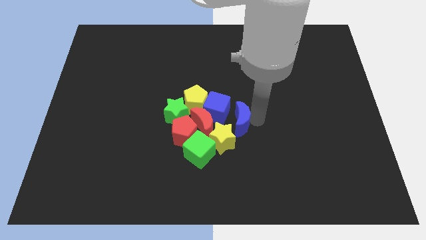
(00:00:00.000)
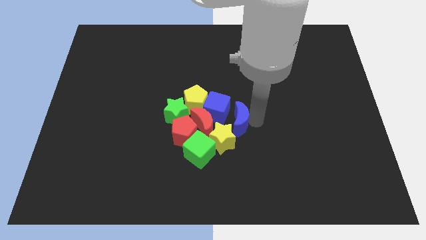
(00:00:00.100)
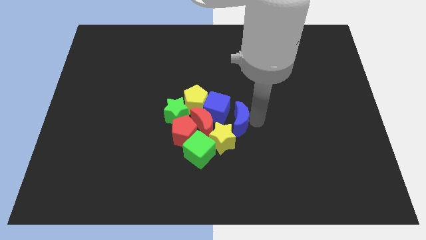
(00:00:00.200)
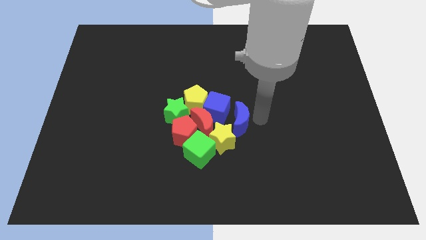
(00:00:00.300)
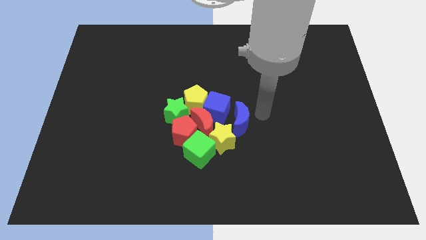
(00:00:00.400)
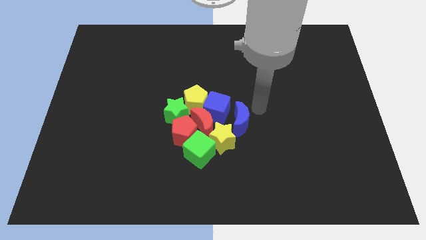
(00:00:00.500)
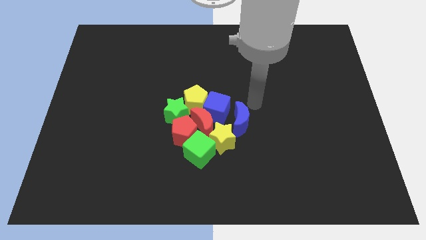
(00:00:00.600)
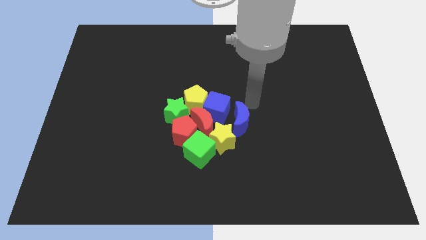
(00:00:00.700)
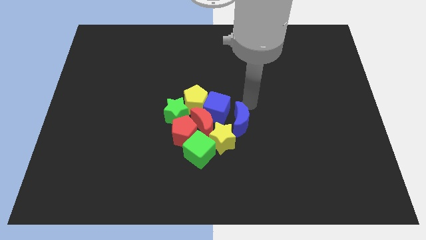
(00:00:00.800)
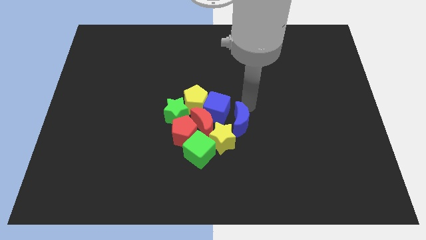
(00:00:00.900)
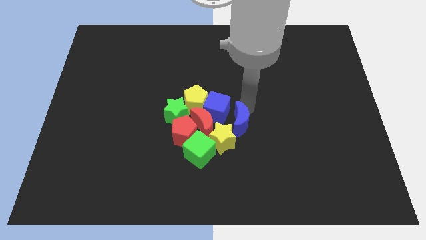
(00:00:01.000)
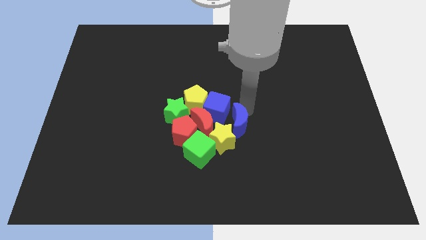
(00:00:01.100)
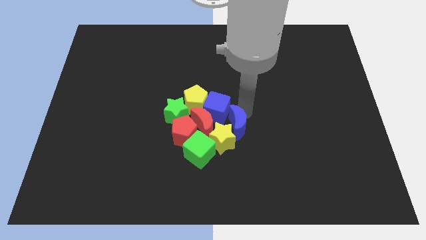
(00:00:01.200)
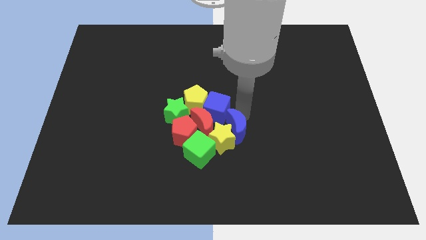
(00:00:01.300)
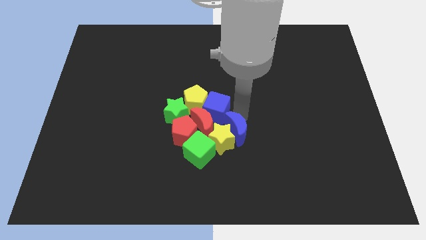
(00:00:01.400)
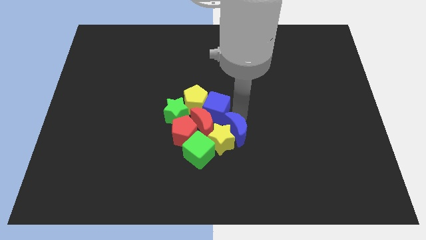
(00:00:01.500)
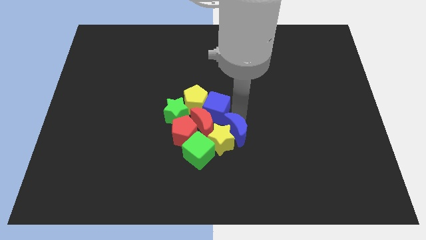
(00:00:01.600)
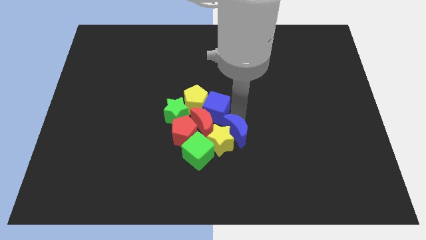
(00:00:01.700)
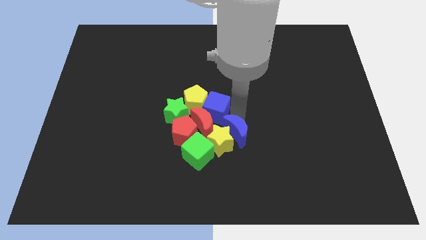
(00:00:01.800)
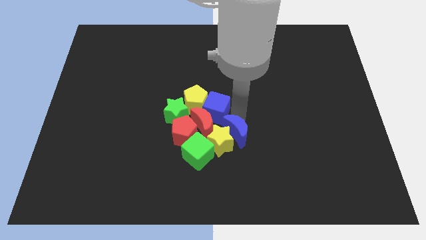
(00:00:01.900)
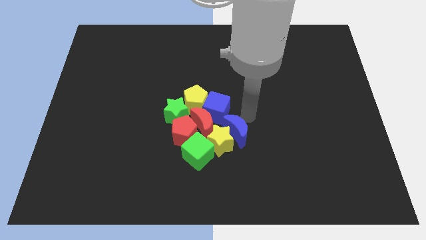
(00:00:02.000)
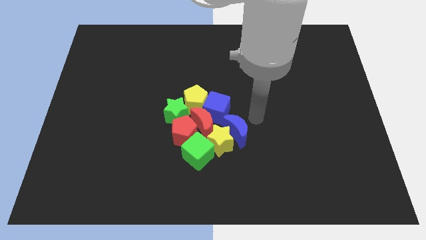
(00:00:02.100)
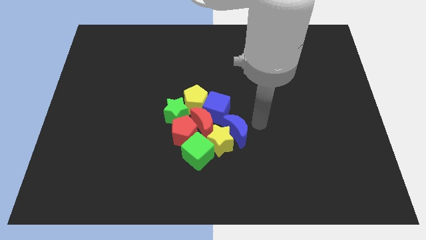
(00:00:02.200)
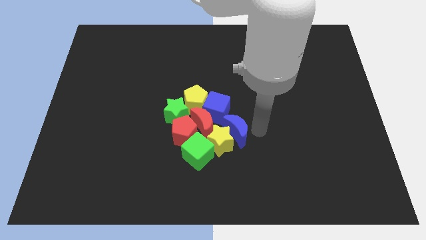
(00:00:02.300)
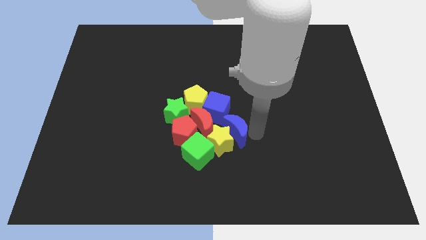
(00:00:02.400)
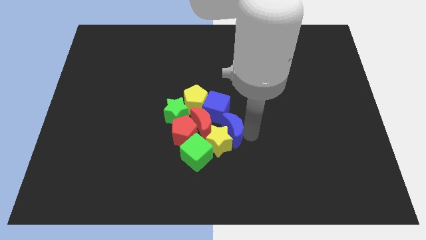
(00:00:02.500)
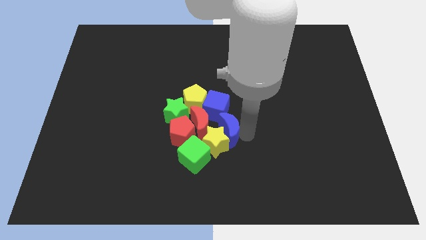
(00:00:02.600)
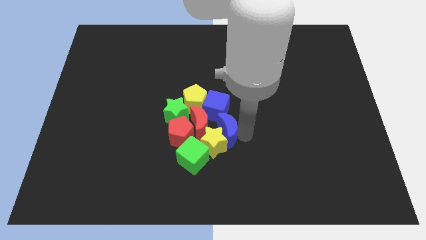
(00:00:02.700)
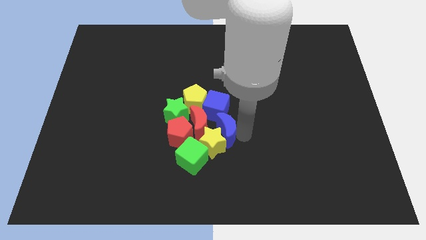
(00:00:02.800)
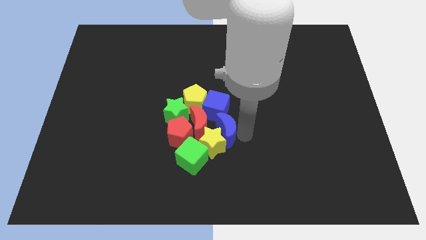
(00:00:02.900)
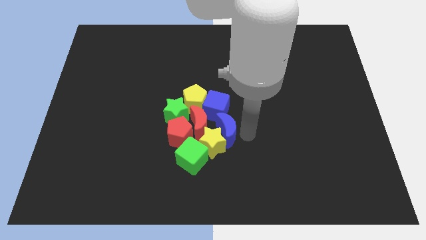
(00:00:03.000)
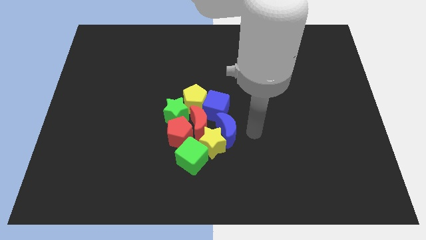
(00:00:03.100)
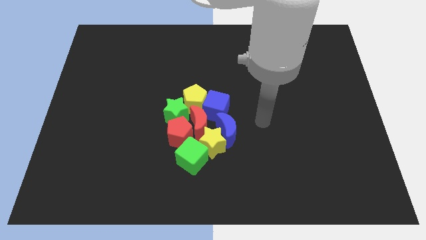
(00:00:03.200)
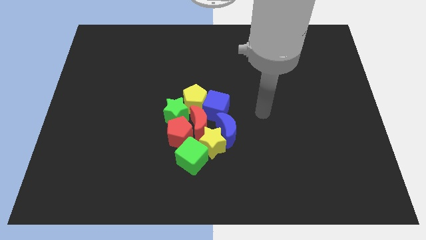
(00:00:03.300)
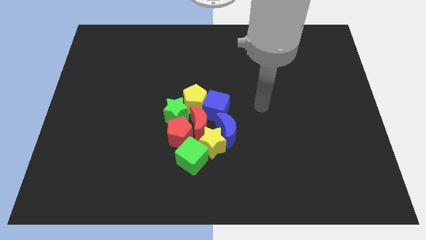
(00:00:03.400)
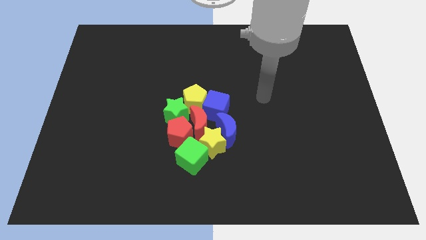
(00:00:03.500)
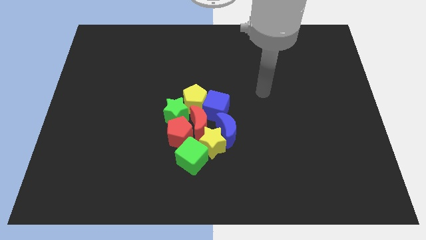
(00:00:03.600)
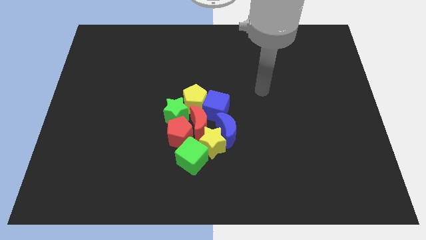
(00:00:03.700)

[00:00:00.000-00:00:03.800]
group up all the blocks

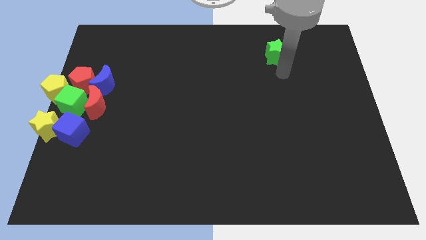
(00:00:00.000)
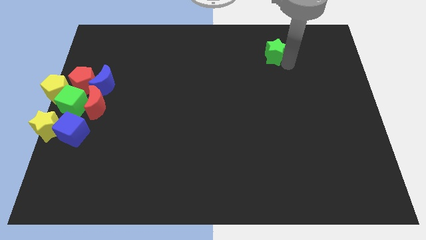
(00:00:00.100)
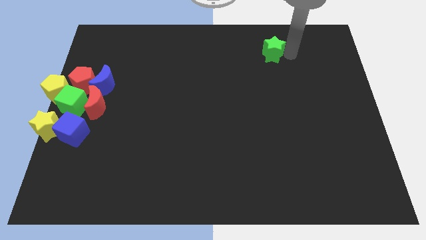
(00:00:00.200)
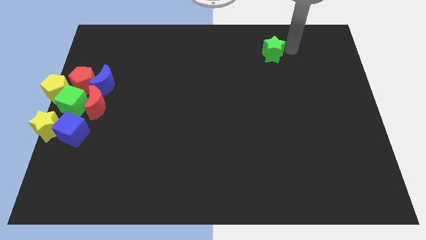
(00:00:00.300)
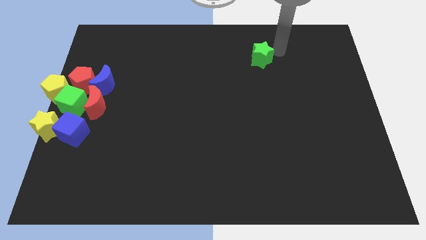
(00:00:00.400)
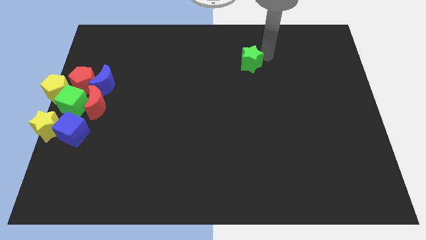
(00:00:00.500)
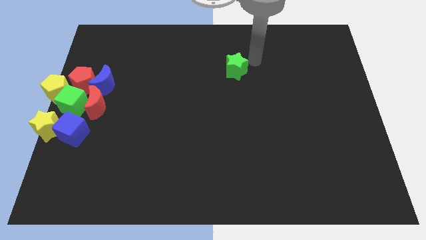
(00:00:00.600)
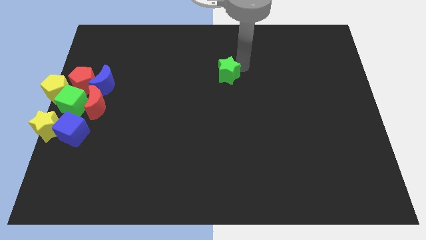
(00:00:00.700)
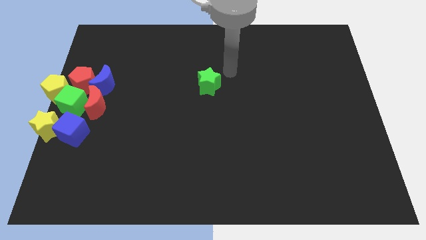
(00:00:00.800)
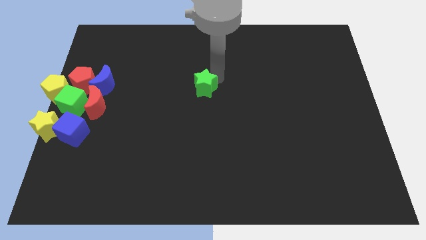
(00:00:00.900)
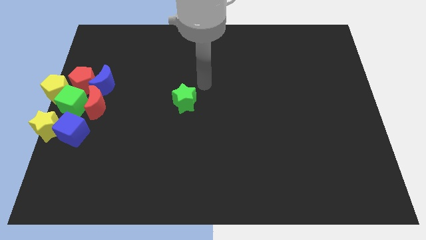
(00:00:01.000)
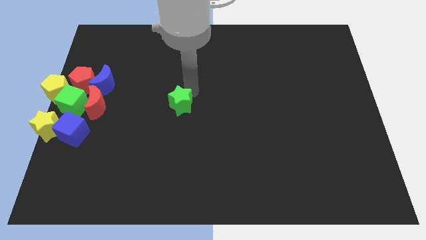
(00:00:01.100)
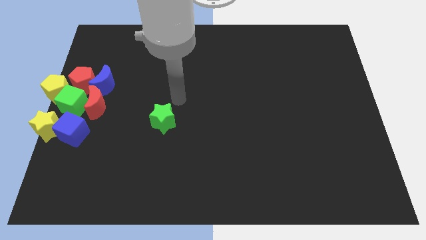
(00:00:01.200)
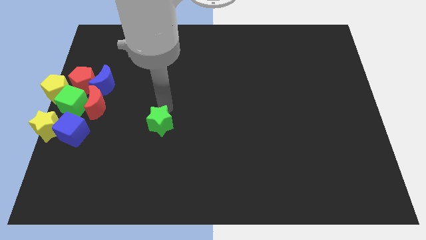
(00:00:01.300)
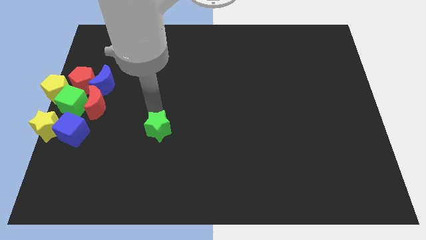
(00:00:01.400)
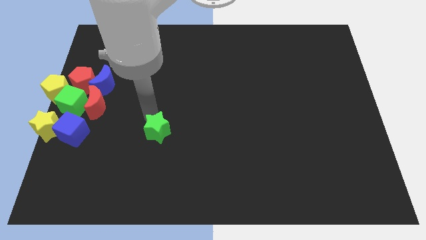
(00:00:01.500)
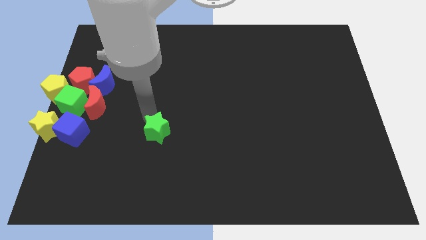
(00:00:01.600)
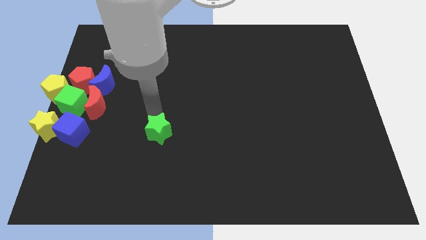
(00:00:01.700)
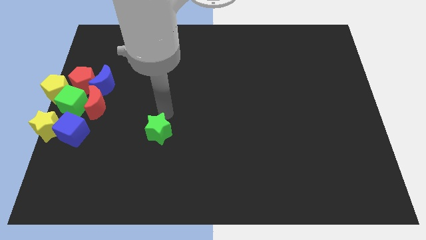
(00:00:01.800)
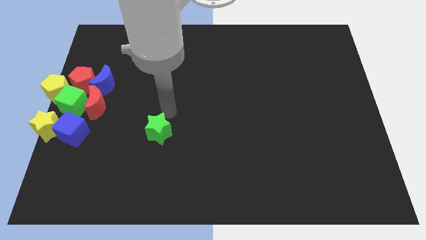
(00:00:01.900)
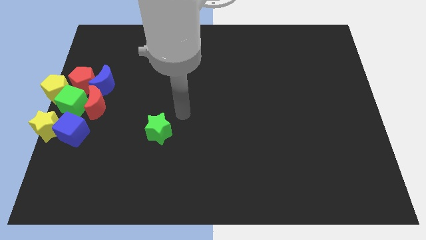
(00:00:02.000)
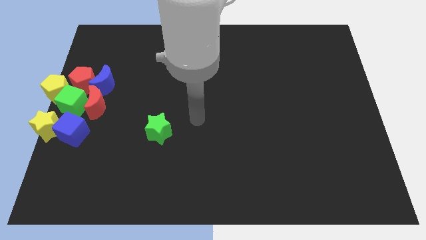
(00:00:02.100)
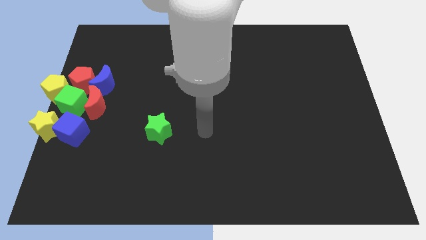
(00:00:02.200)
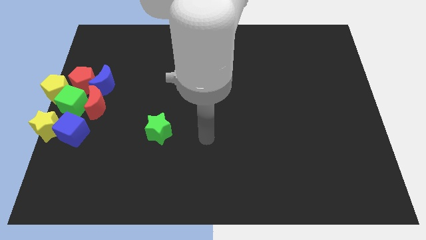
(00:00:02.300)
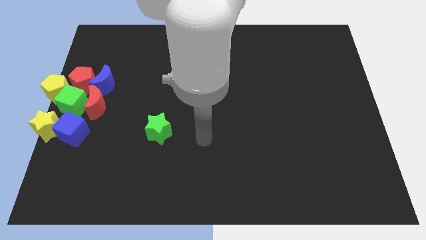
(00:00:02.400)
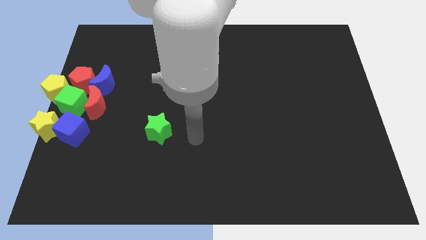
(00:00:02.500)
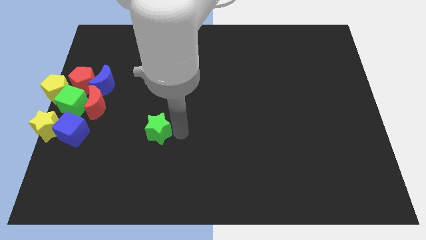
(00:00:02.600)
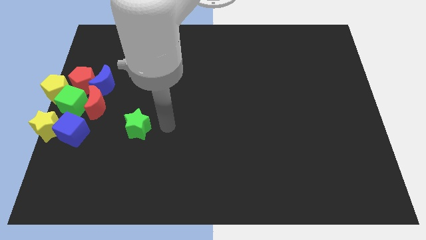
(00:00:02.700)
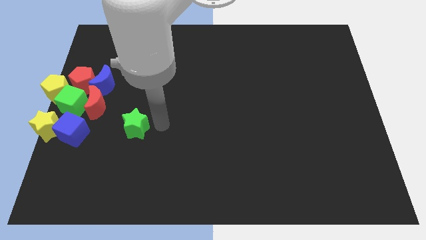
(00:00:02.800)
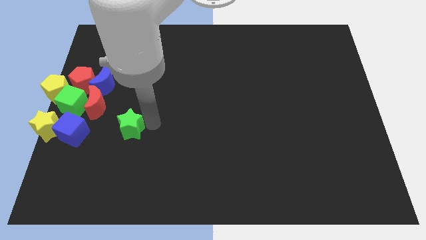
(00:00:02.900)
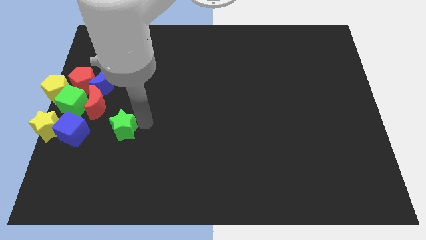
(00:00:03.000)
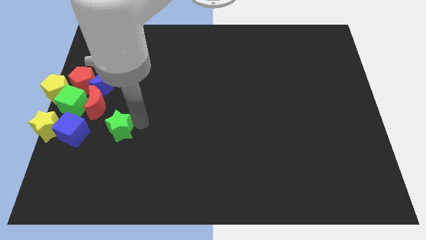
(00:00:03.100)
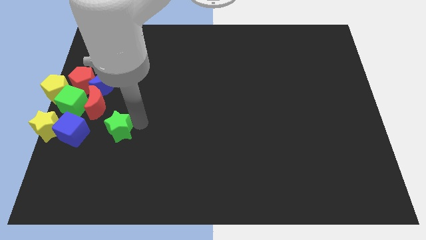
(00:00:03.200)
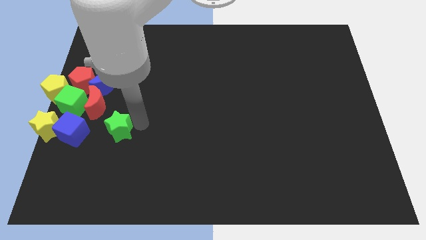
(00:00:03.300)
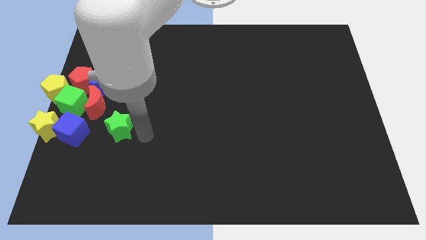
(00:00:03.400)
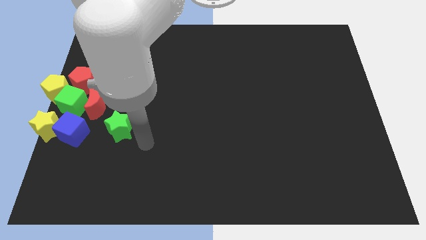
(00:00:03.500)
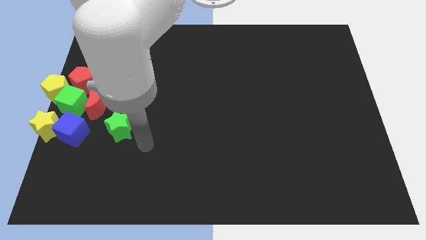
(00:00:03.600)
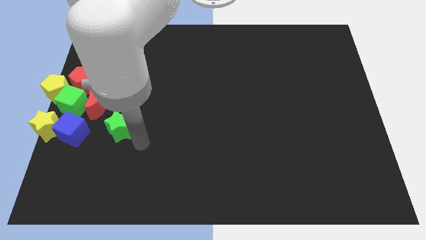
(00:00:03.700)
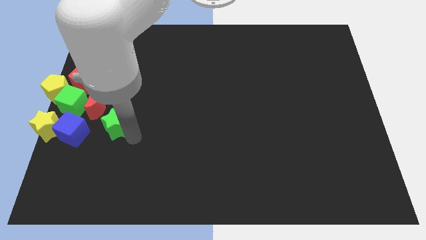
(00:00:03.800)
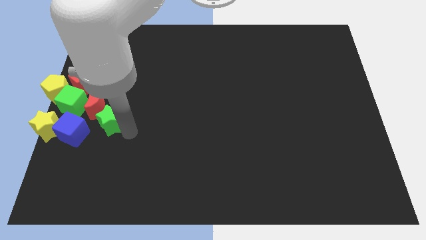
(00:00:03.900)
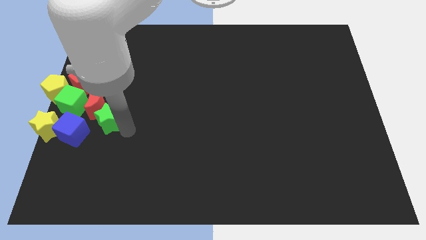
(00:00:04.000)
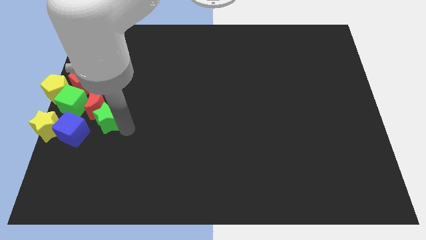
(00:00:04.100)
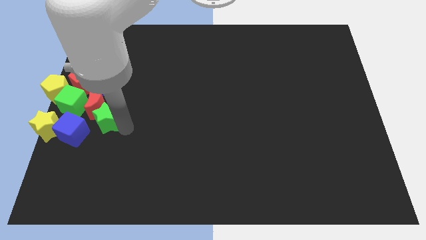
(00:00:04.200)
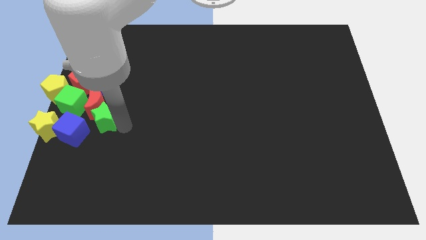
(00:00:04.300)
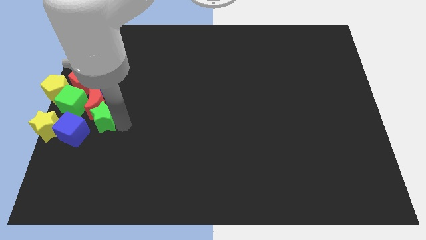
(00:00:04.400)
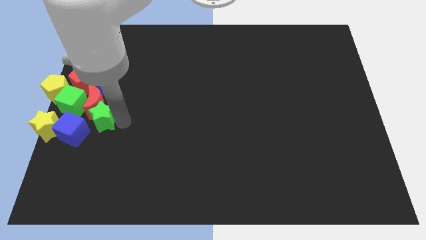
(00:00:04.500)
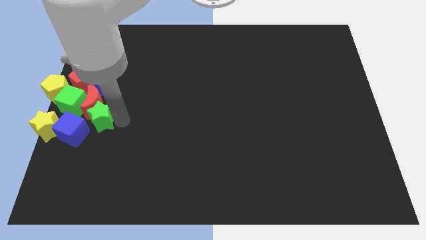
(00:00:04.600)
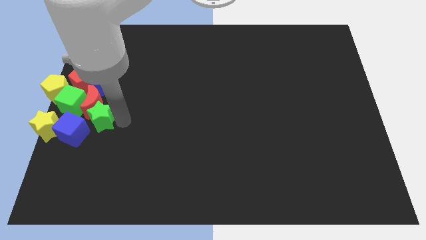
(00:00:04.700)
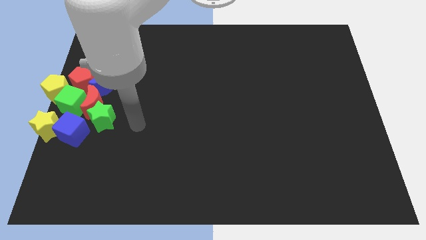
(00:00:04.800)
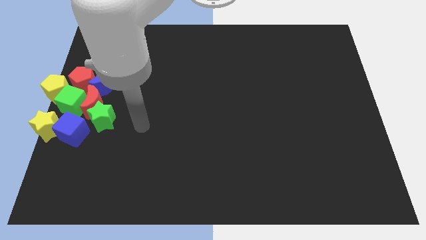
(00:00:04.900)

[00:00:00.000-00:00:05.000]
push the green star into red moon
